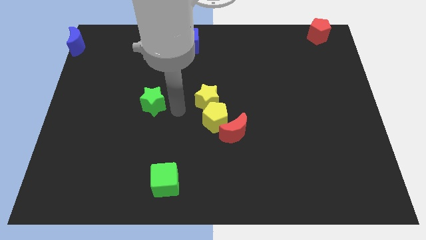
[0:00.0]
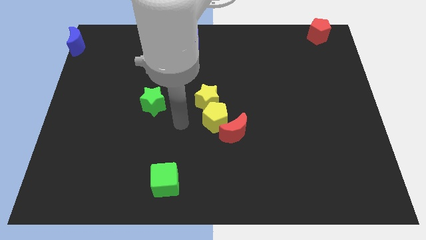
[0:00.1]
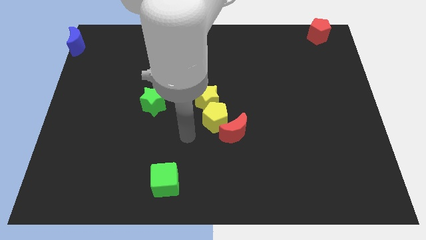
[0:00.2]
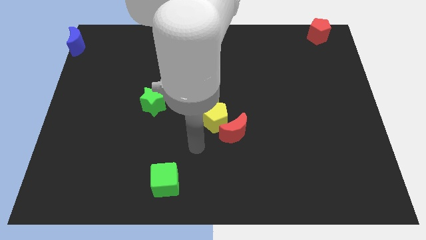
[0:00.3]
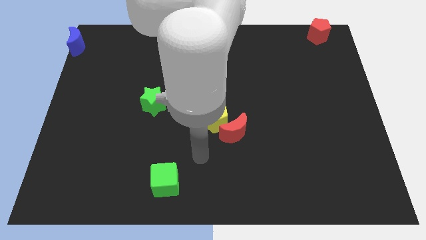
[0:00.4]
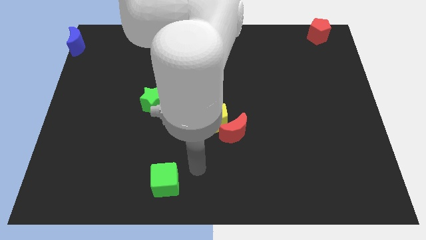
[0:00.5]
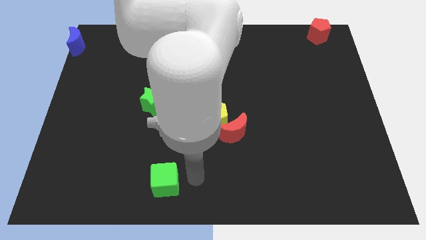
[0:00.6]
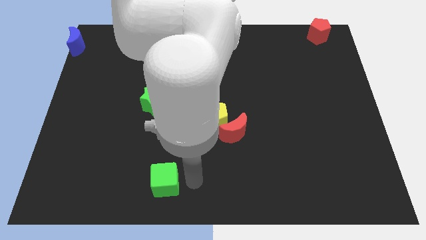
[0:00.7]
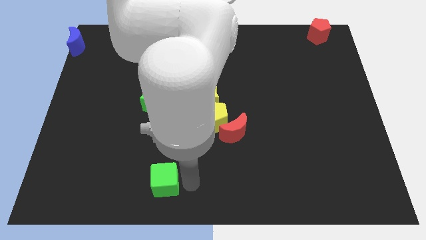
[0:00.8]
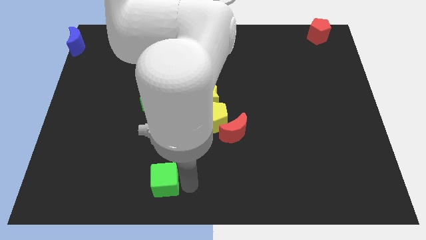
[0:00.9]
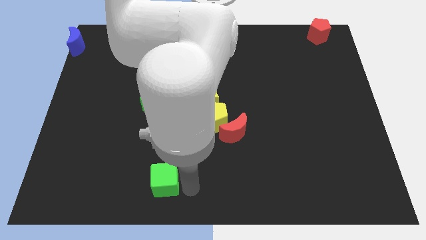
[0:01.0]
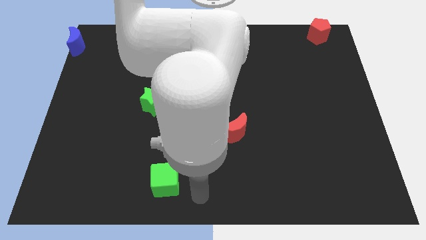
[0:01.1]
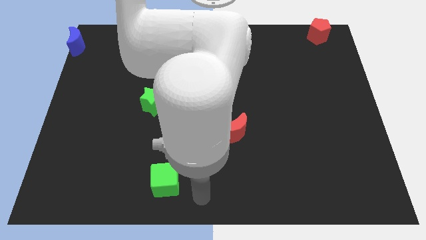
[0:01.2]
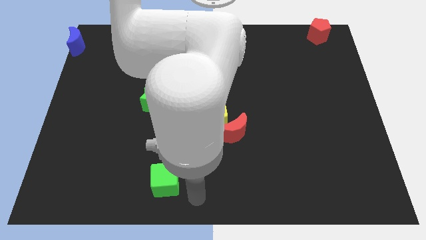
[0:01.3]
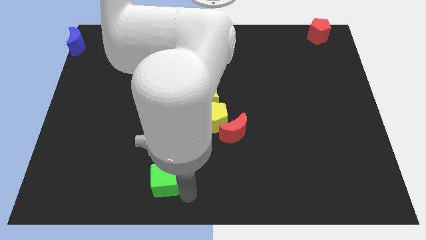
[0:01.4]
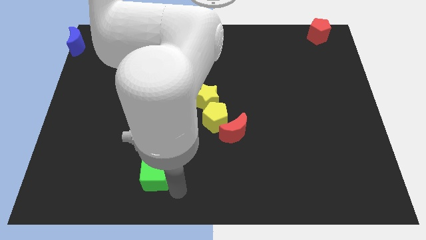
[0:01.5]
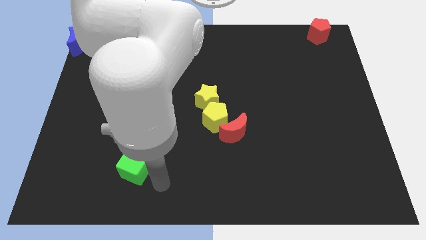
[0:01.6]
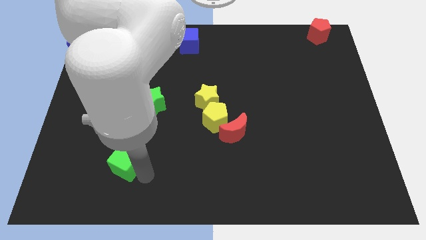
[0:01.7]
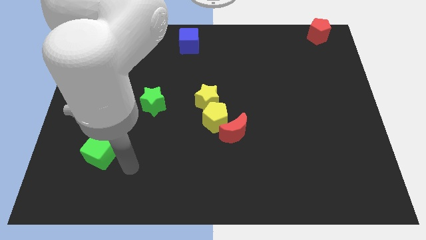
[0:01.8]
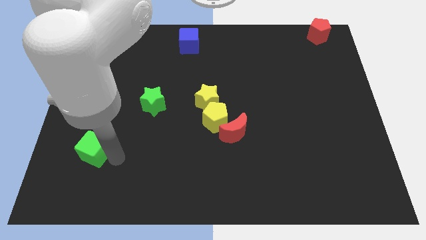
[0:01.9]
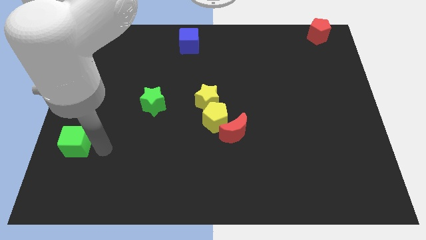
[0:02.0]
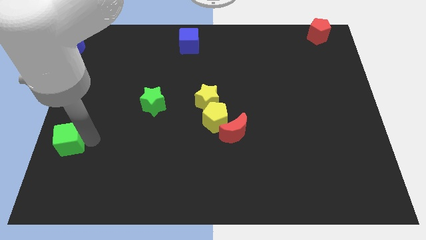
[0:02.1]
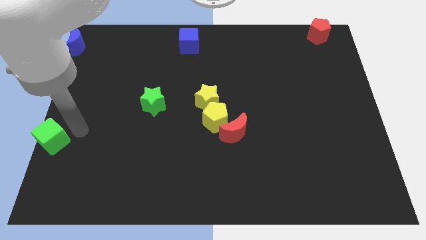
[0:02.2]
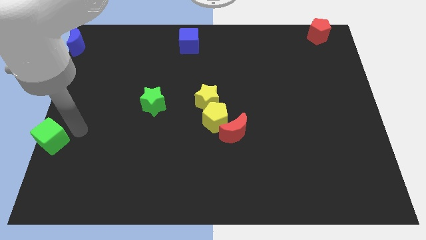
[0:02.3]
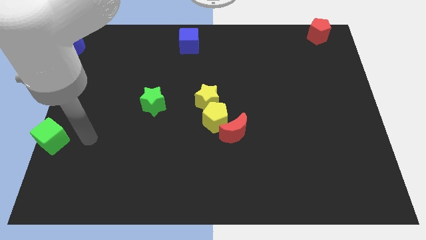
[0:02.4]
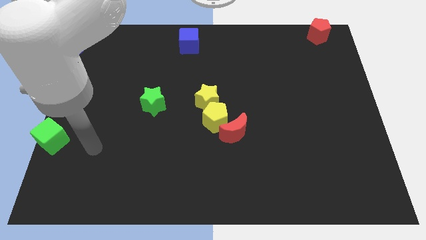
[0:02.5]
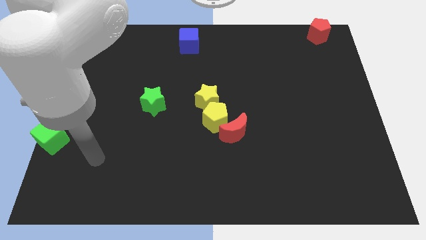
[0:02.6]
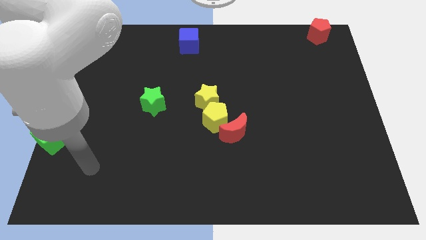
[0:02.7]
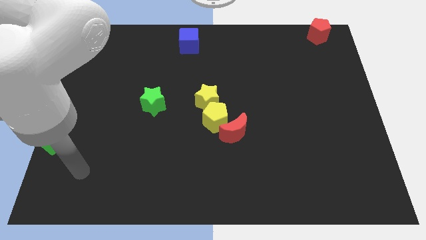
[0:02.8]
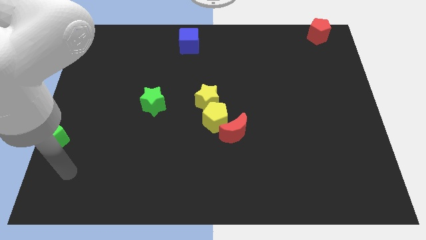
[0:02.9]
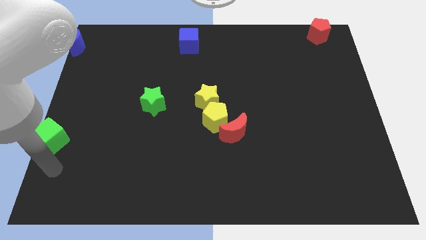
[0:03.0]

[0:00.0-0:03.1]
drag the green cube to the left

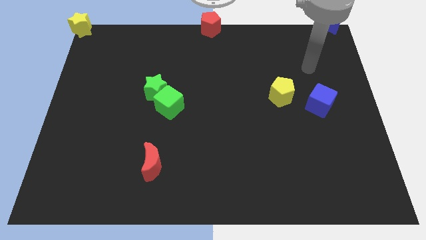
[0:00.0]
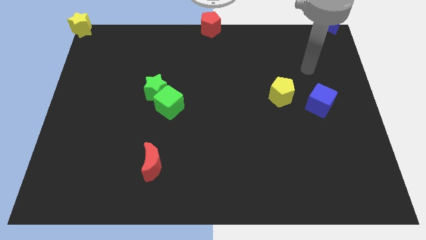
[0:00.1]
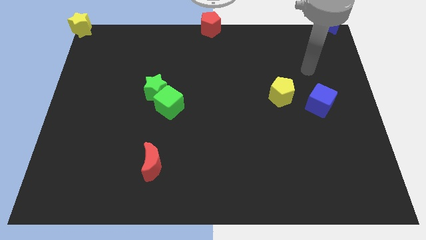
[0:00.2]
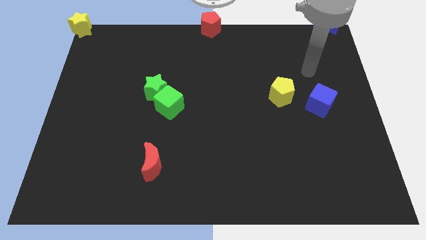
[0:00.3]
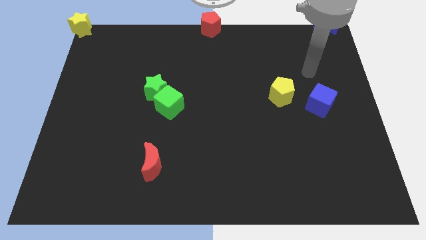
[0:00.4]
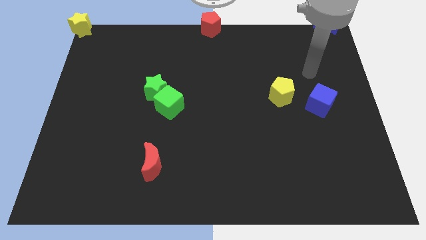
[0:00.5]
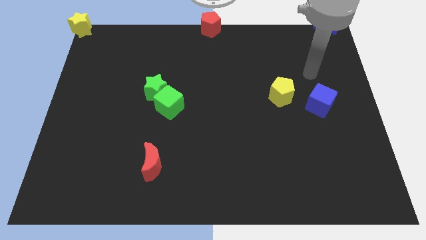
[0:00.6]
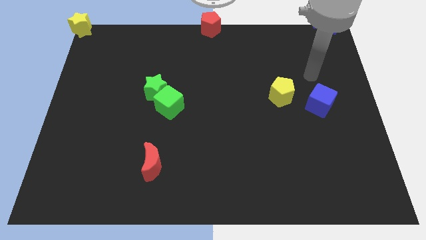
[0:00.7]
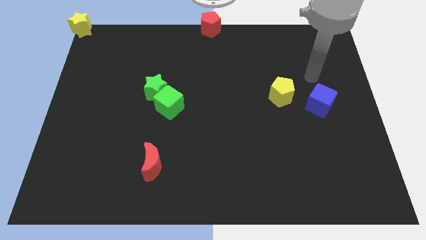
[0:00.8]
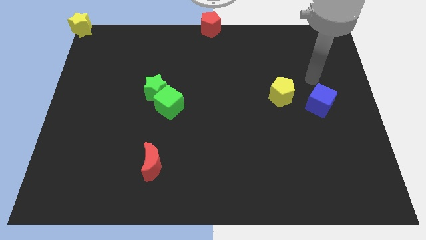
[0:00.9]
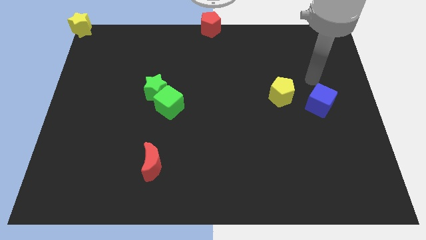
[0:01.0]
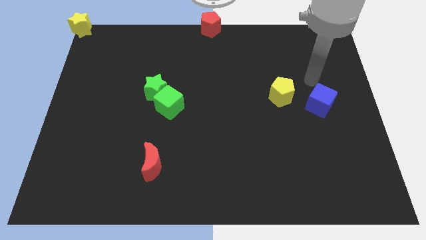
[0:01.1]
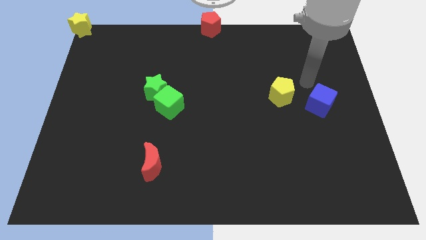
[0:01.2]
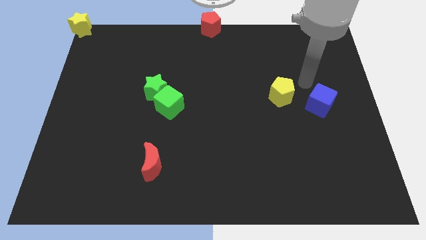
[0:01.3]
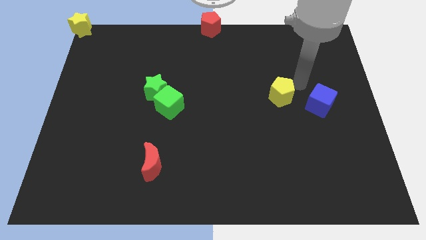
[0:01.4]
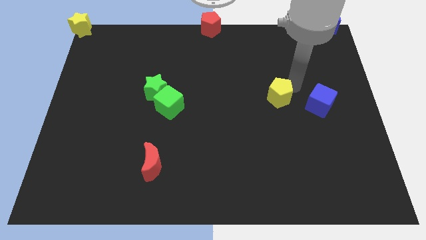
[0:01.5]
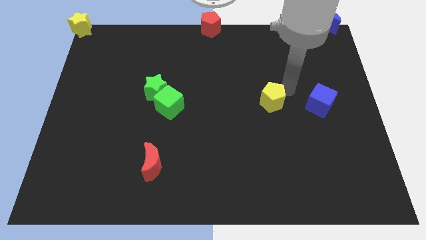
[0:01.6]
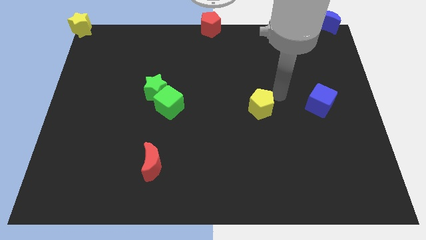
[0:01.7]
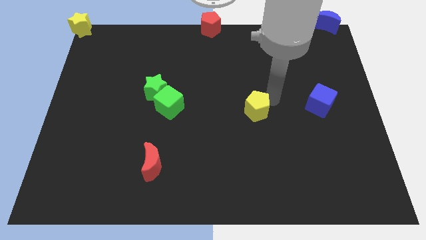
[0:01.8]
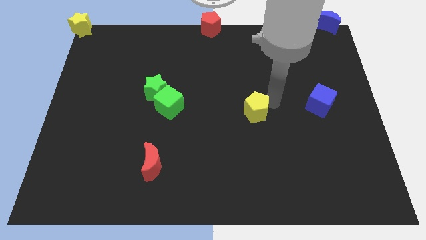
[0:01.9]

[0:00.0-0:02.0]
place the yellow pentagon horizontally to the right side of the green cube

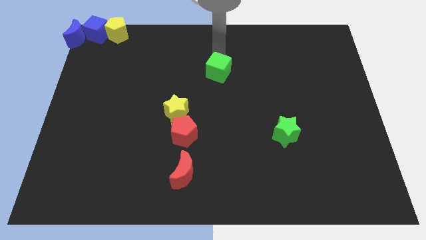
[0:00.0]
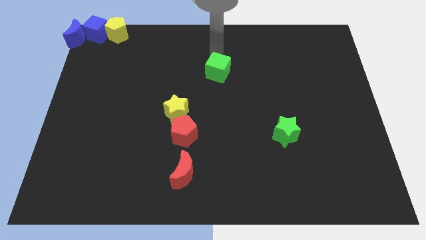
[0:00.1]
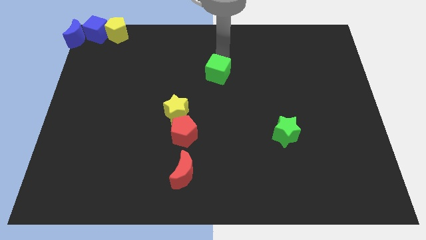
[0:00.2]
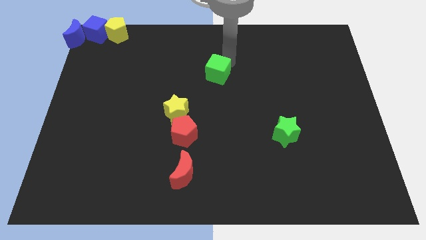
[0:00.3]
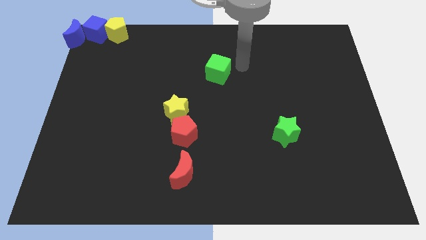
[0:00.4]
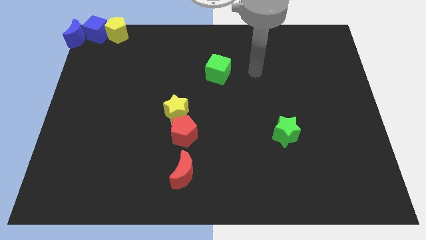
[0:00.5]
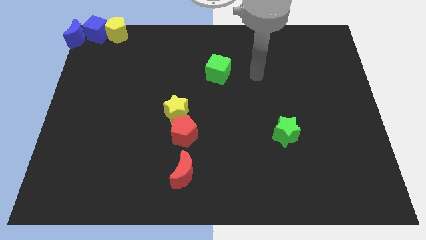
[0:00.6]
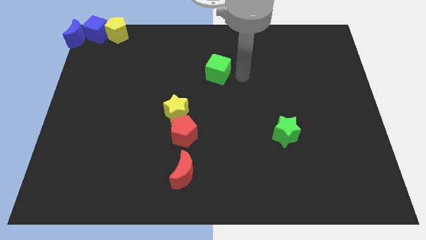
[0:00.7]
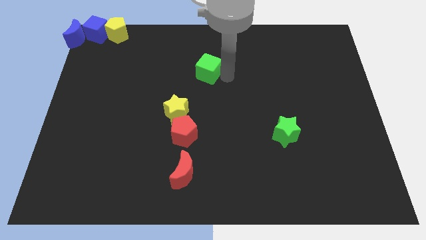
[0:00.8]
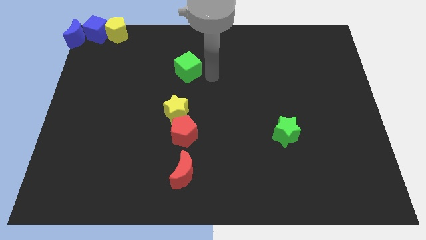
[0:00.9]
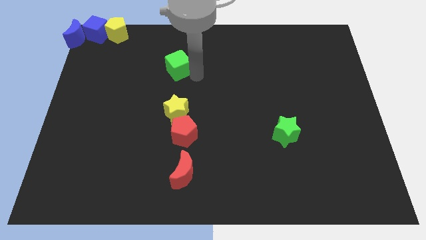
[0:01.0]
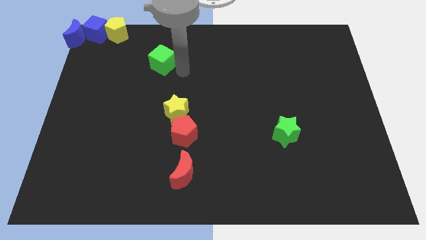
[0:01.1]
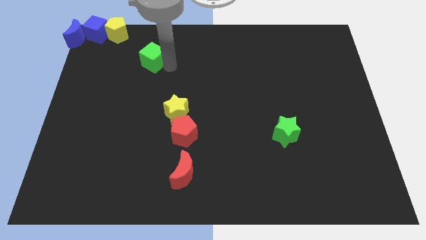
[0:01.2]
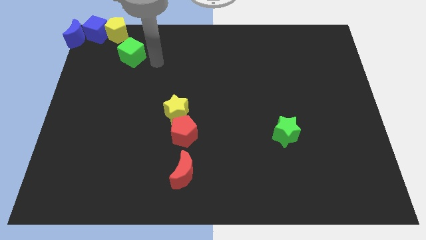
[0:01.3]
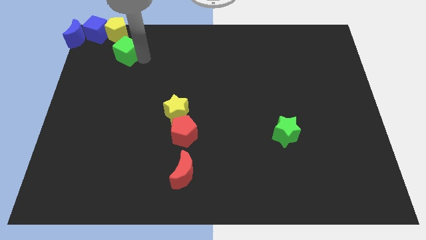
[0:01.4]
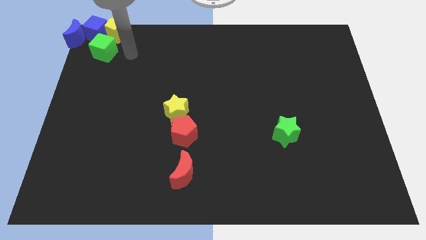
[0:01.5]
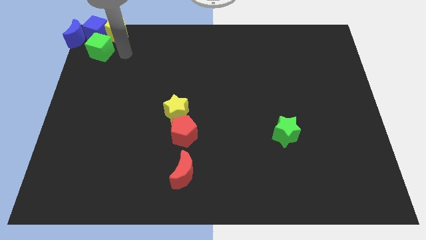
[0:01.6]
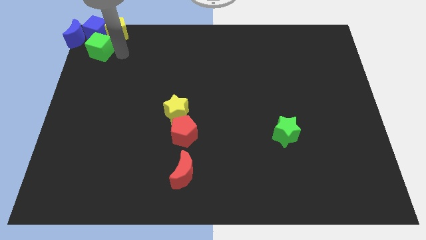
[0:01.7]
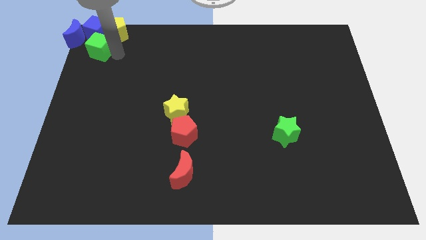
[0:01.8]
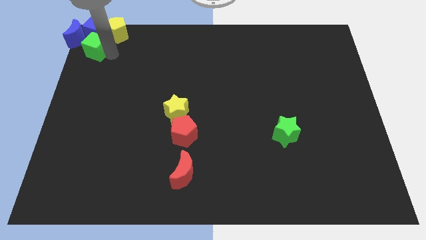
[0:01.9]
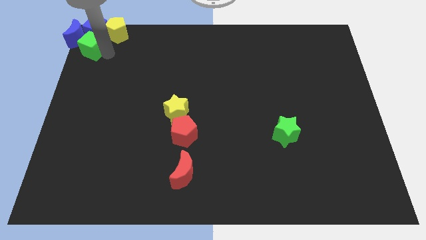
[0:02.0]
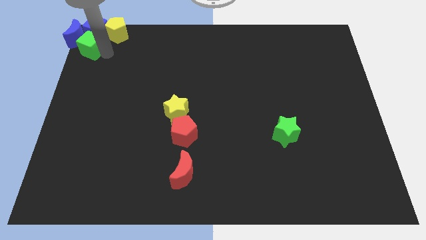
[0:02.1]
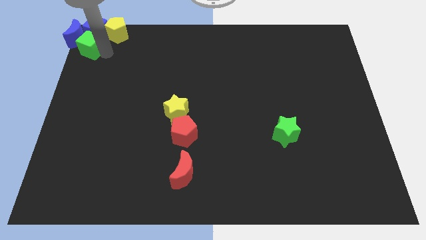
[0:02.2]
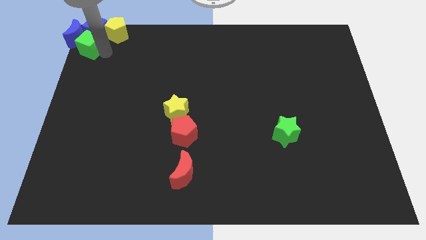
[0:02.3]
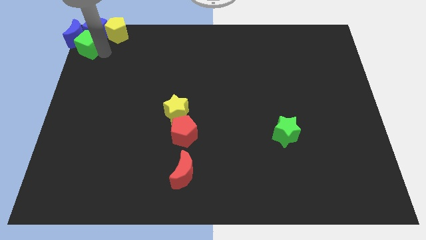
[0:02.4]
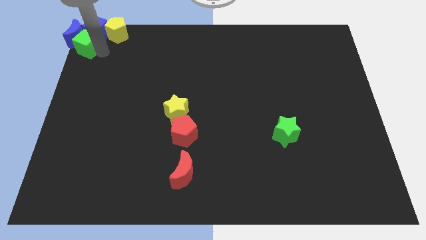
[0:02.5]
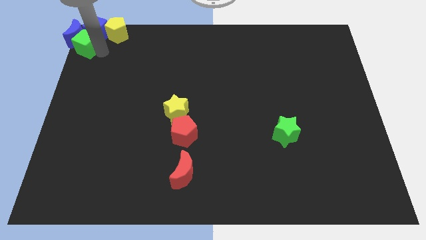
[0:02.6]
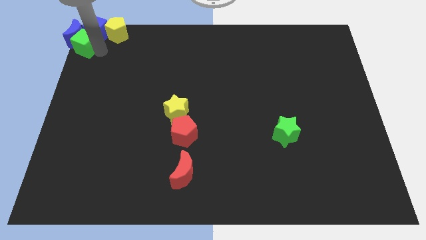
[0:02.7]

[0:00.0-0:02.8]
put the green cube at the bottom of blue blocks

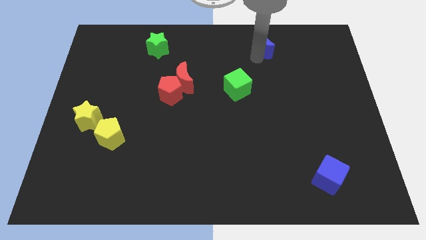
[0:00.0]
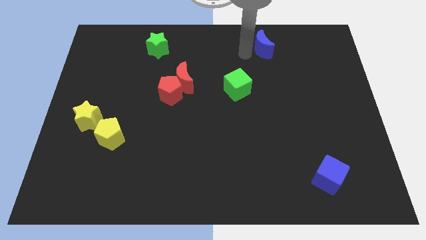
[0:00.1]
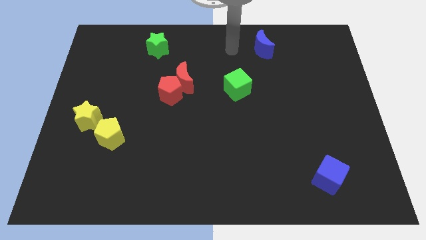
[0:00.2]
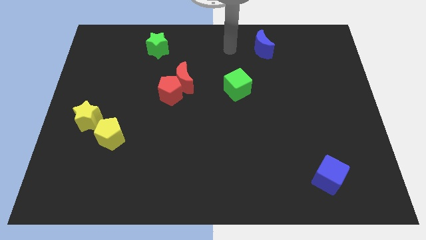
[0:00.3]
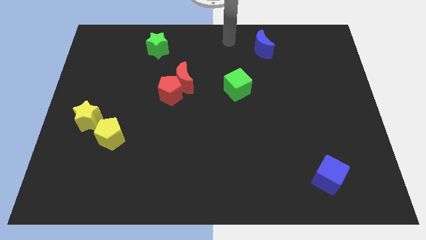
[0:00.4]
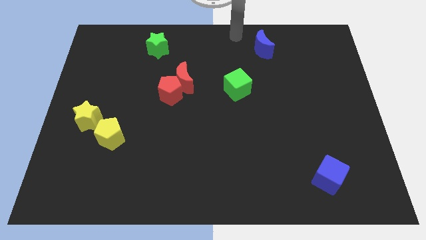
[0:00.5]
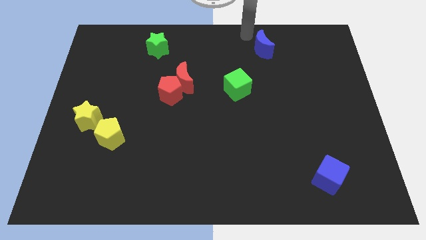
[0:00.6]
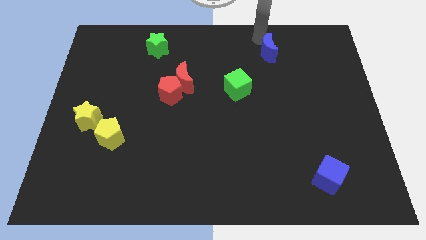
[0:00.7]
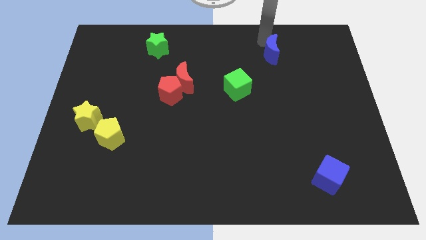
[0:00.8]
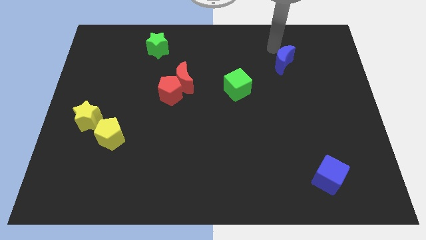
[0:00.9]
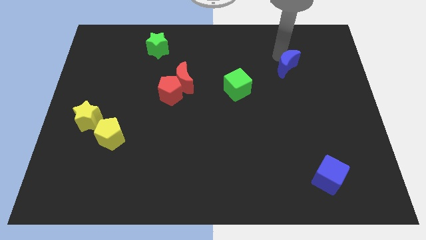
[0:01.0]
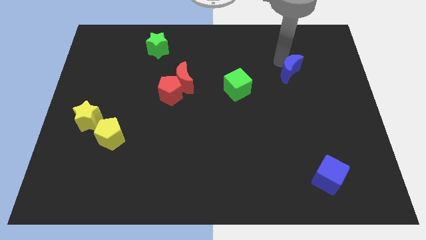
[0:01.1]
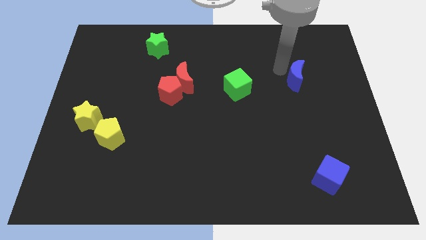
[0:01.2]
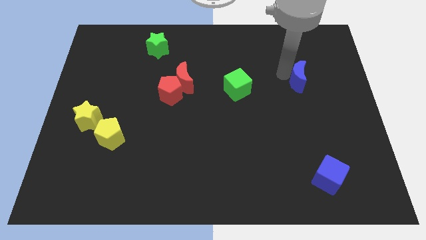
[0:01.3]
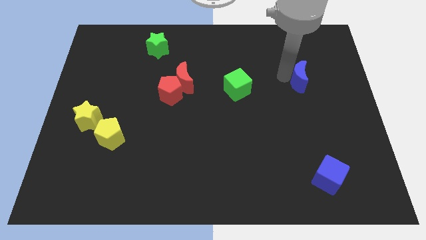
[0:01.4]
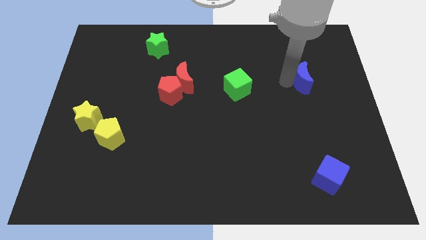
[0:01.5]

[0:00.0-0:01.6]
place the blue crescent to the right side of the green cube
